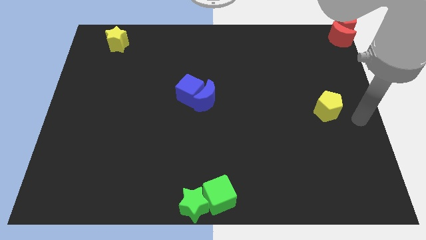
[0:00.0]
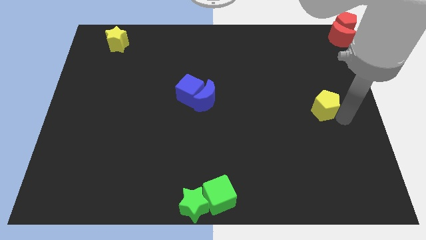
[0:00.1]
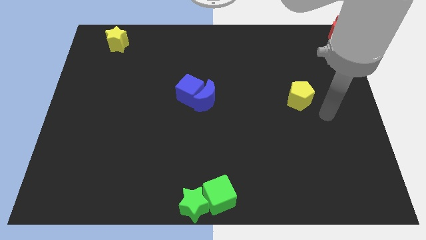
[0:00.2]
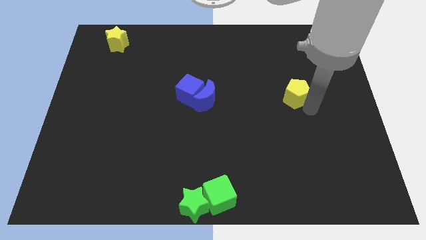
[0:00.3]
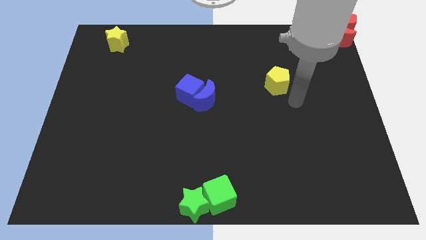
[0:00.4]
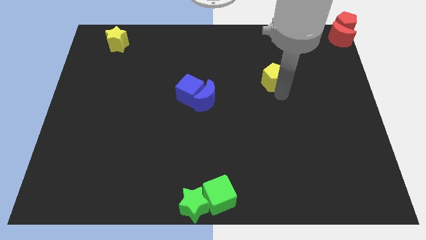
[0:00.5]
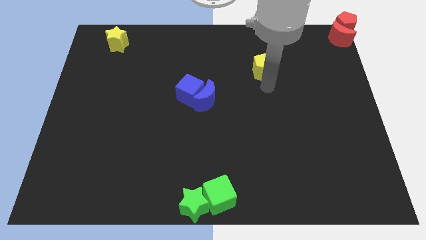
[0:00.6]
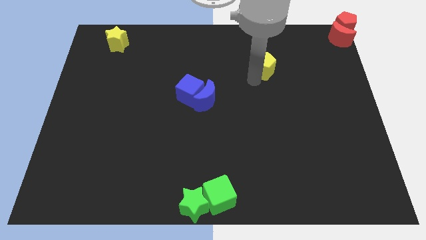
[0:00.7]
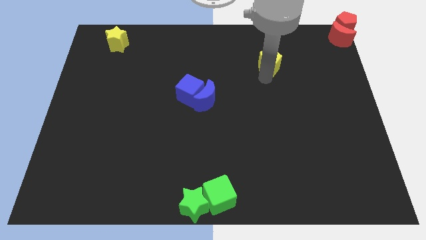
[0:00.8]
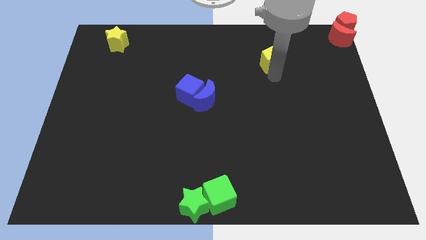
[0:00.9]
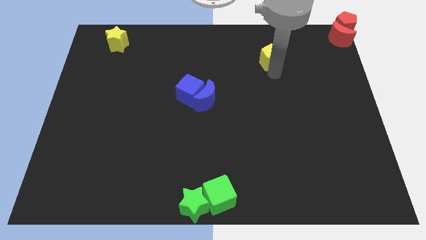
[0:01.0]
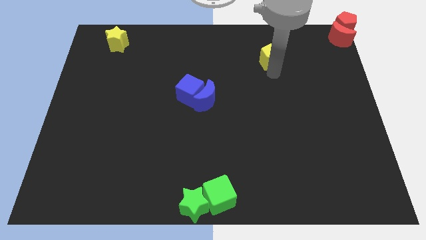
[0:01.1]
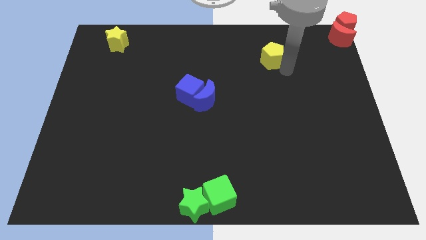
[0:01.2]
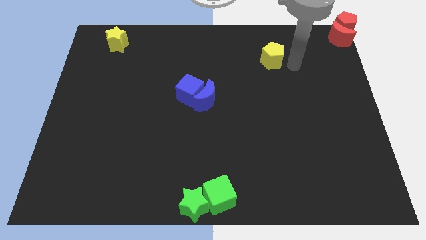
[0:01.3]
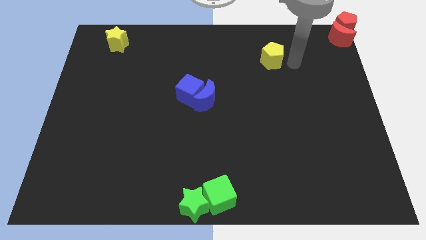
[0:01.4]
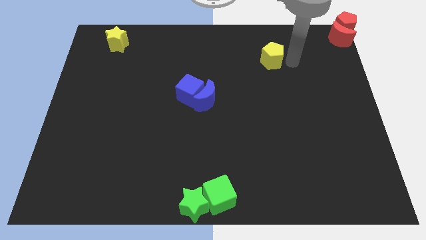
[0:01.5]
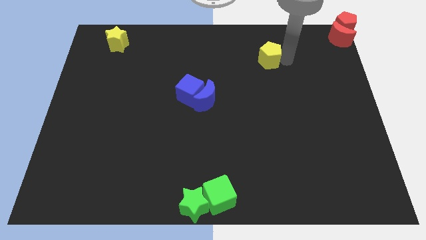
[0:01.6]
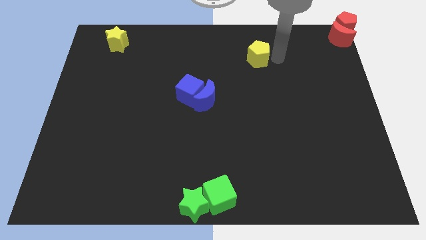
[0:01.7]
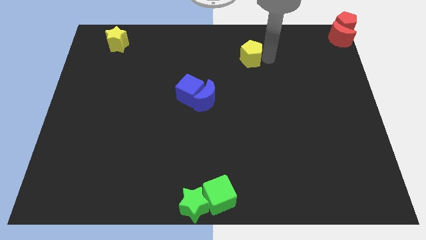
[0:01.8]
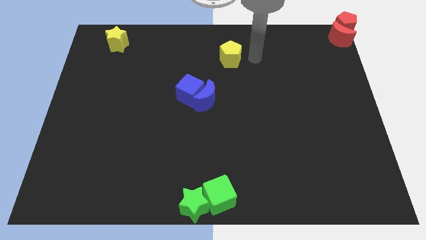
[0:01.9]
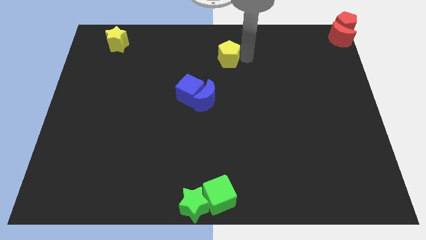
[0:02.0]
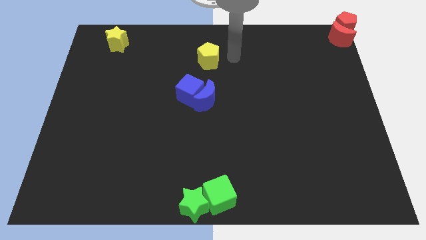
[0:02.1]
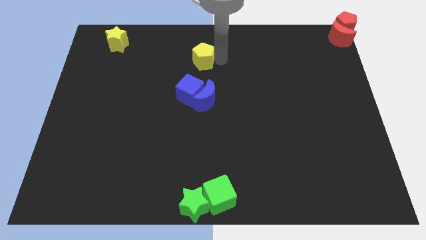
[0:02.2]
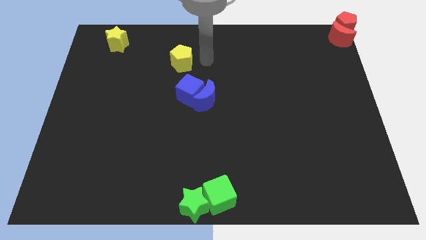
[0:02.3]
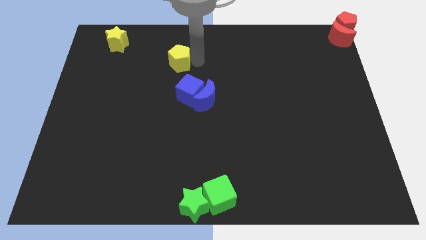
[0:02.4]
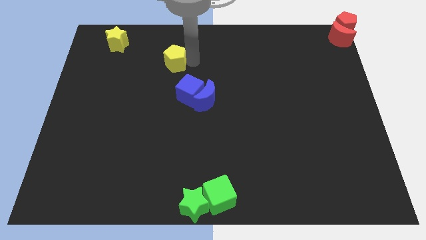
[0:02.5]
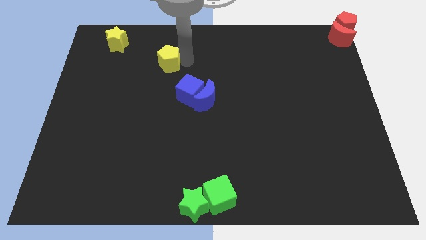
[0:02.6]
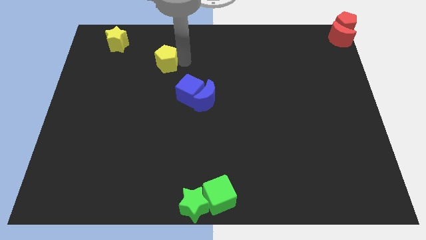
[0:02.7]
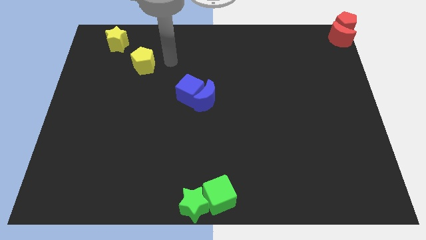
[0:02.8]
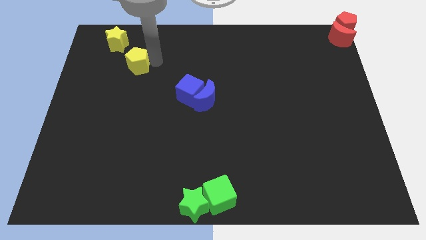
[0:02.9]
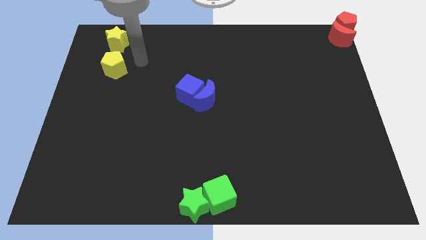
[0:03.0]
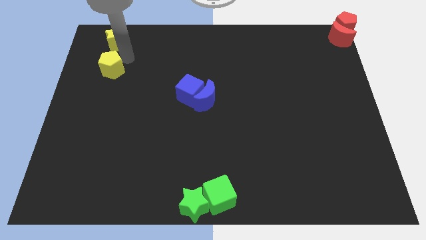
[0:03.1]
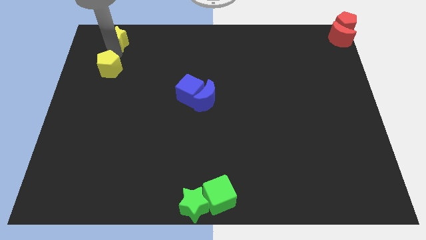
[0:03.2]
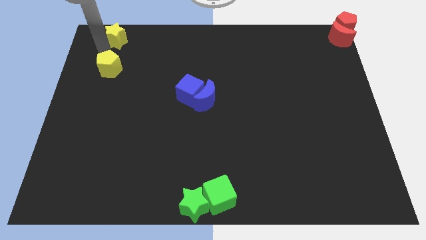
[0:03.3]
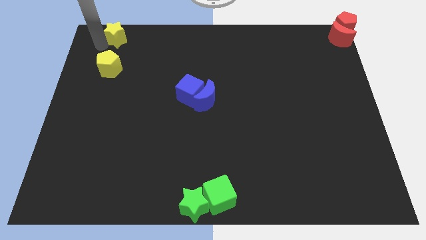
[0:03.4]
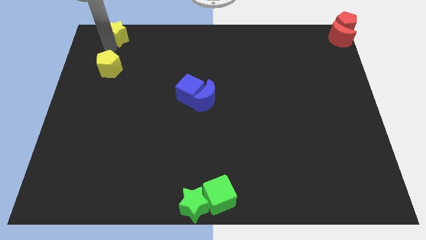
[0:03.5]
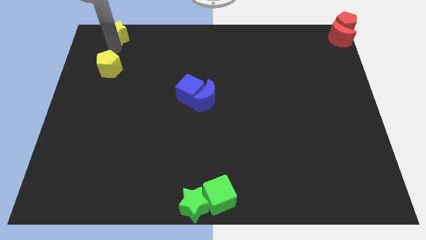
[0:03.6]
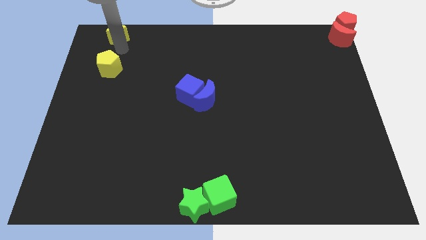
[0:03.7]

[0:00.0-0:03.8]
push the yellow pentagon parallel to the yellow star

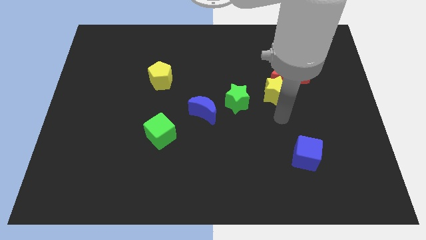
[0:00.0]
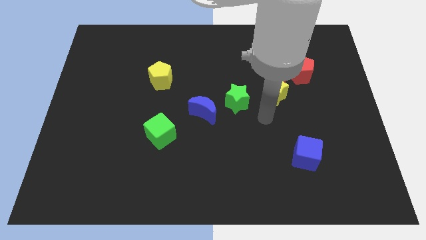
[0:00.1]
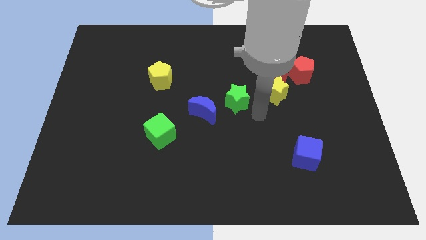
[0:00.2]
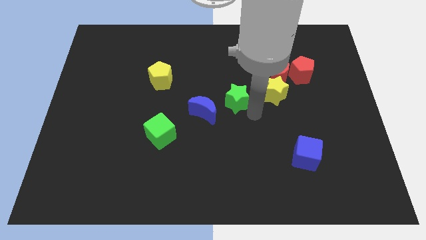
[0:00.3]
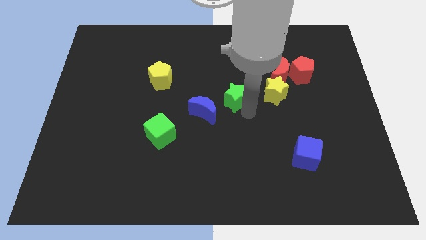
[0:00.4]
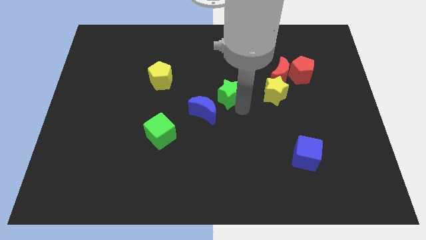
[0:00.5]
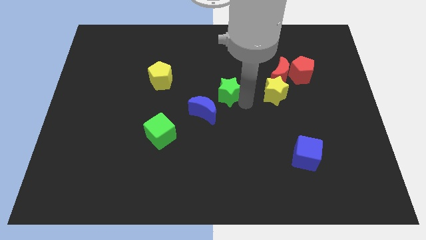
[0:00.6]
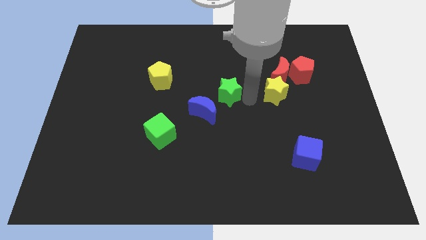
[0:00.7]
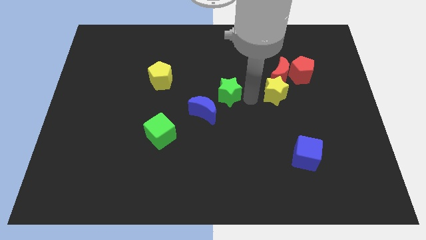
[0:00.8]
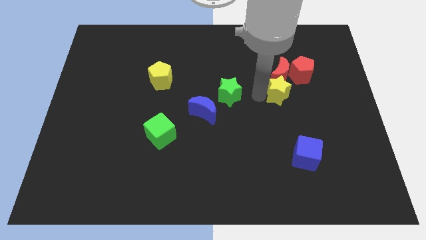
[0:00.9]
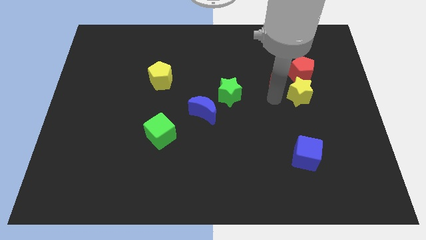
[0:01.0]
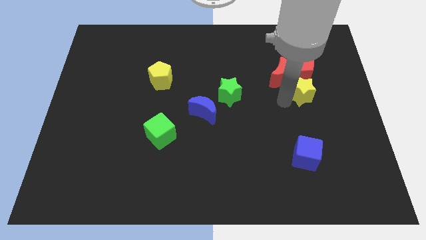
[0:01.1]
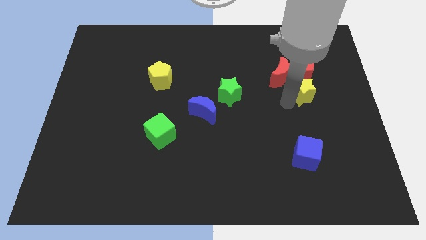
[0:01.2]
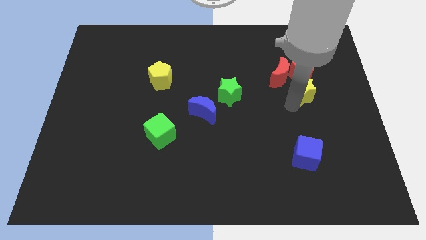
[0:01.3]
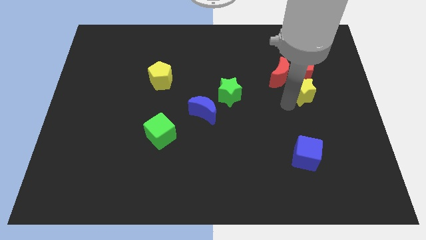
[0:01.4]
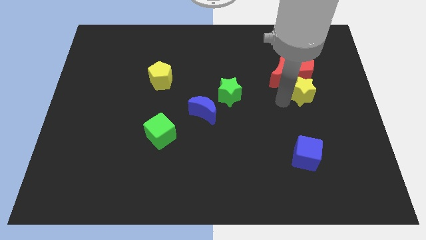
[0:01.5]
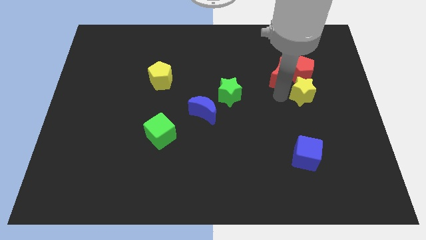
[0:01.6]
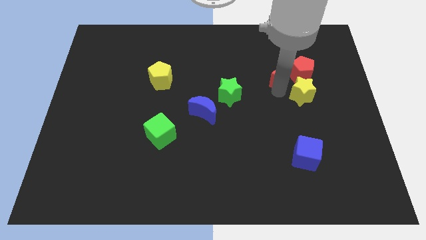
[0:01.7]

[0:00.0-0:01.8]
separate the green star and the yellow star

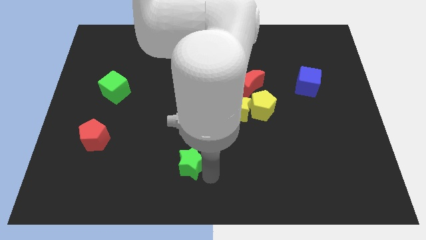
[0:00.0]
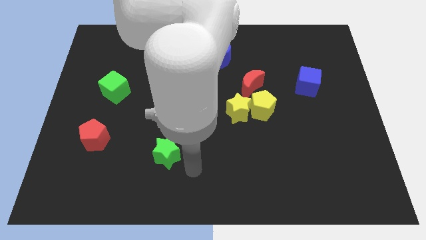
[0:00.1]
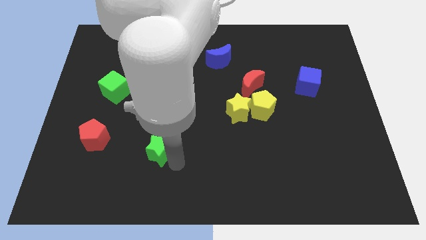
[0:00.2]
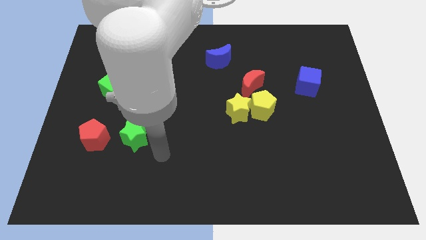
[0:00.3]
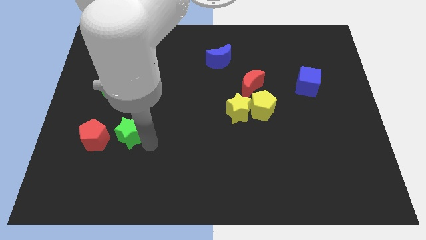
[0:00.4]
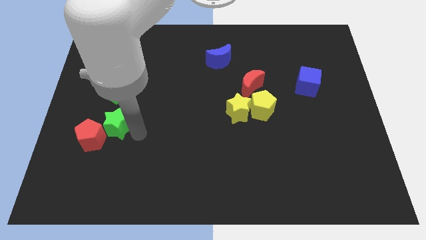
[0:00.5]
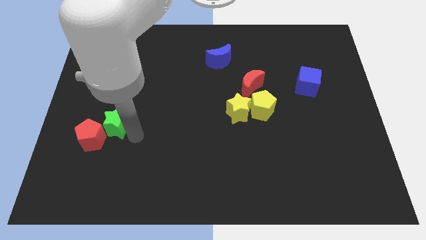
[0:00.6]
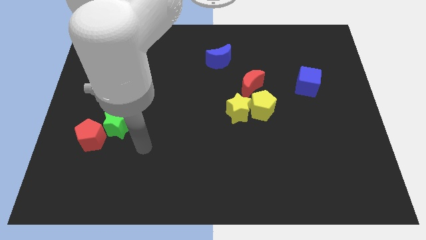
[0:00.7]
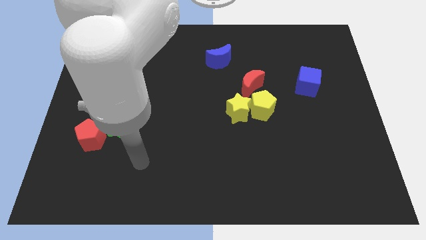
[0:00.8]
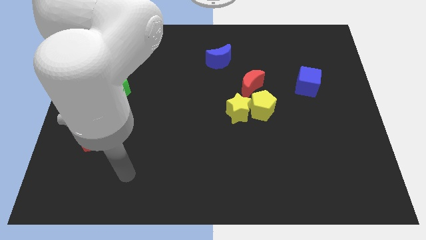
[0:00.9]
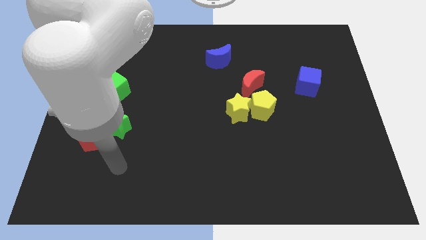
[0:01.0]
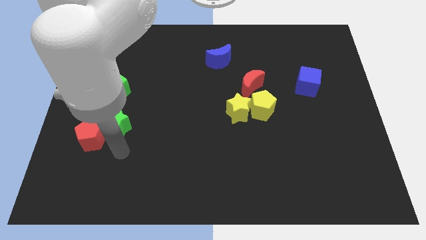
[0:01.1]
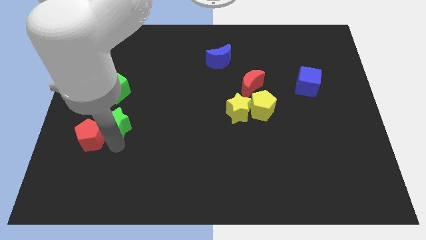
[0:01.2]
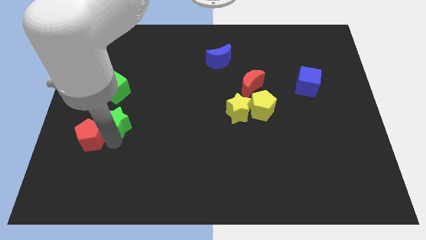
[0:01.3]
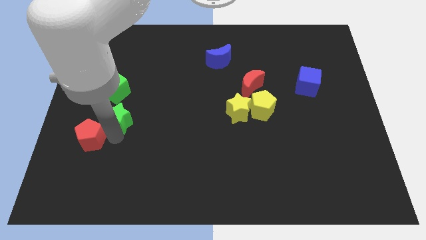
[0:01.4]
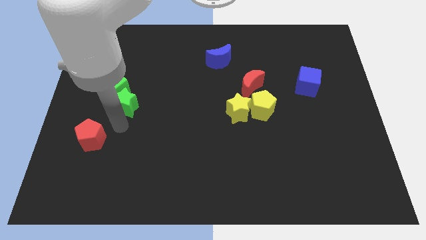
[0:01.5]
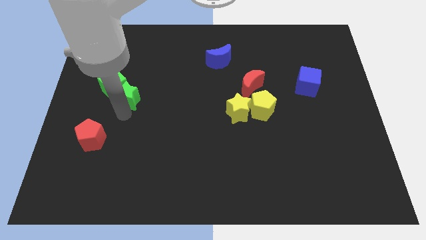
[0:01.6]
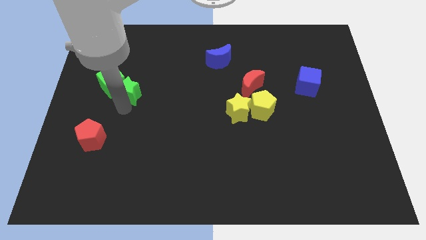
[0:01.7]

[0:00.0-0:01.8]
push the green star into the green cube

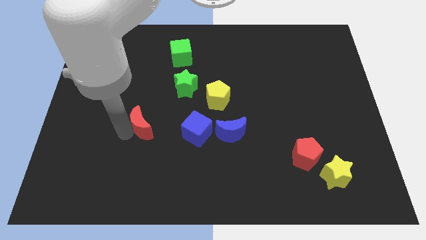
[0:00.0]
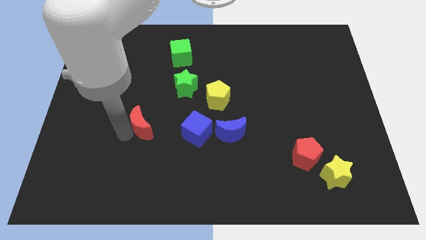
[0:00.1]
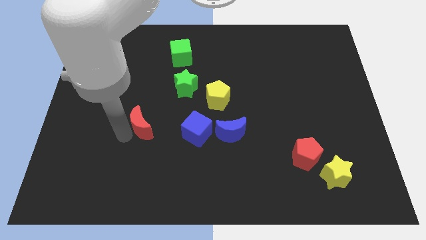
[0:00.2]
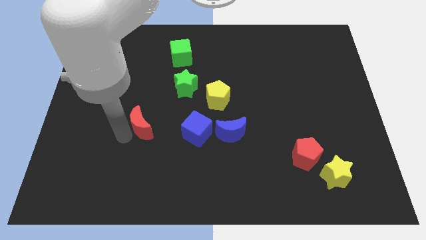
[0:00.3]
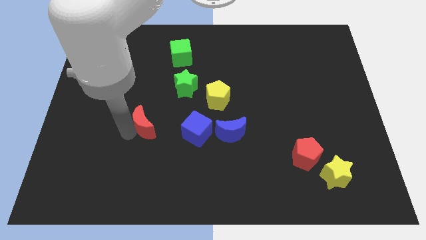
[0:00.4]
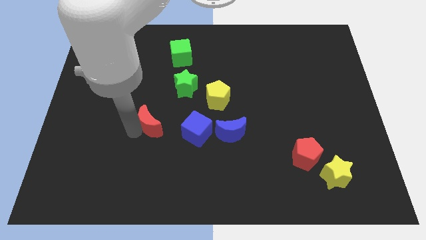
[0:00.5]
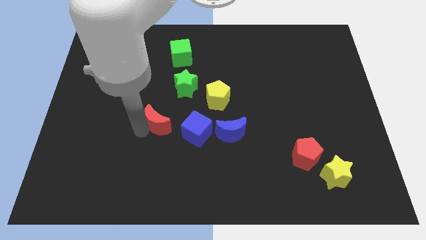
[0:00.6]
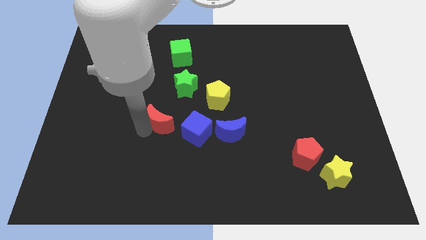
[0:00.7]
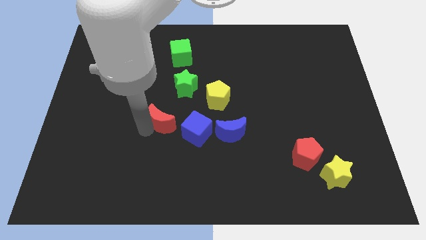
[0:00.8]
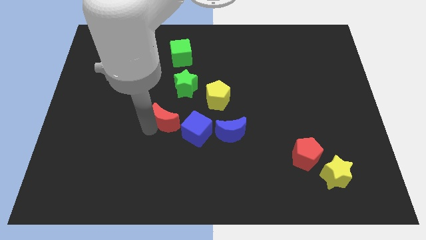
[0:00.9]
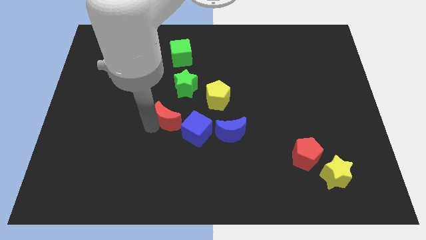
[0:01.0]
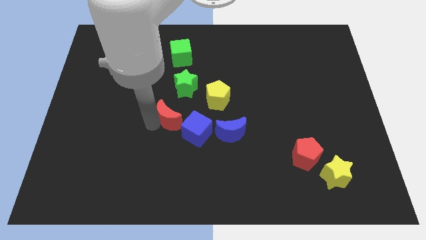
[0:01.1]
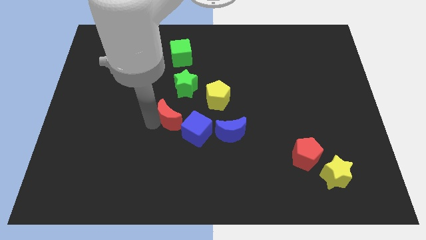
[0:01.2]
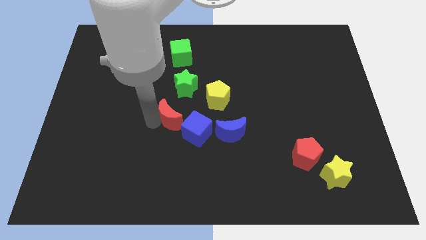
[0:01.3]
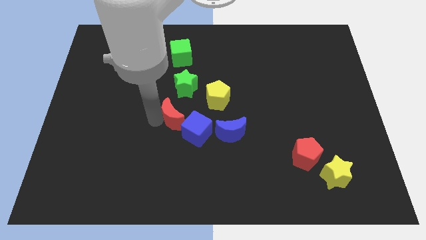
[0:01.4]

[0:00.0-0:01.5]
move the red crescent to the left of the blue cube
